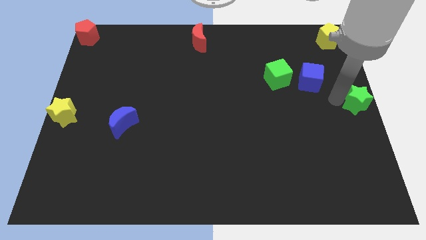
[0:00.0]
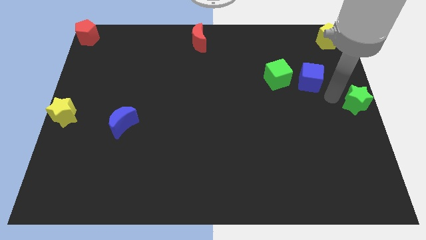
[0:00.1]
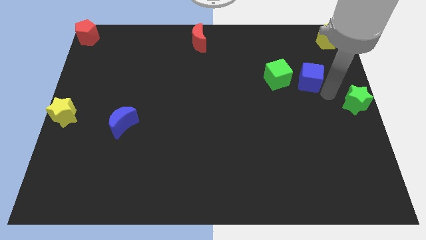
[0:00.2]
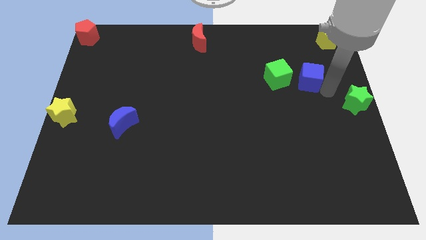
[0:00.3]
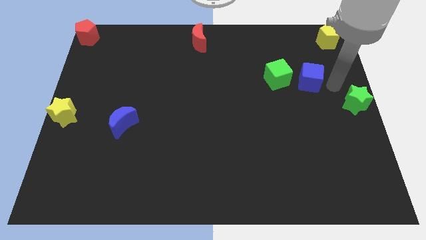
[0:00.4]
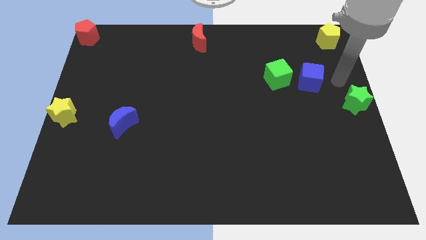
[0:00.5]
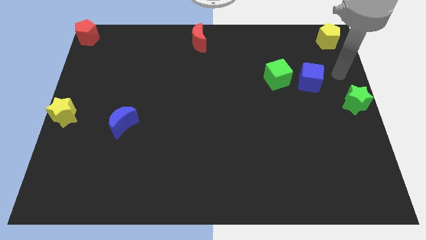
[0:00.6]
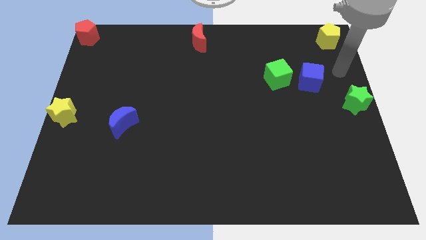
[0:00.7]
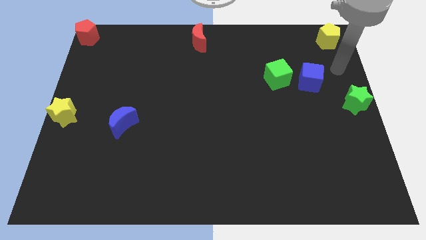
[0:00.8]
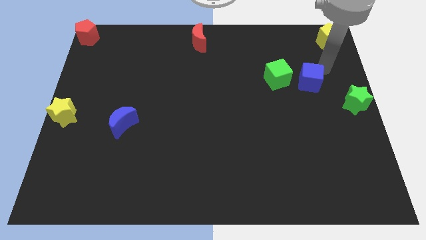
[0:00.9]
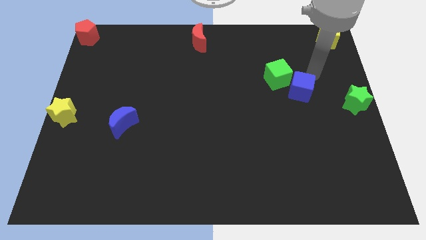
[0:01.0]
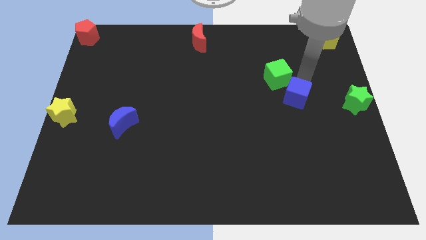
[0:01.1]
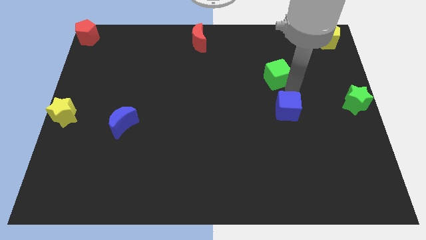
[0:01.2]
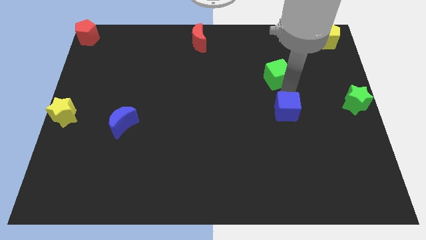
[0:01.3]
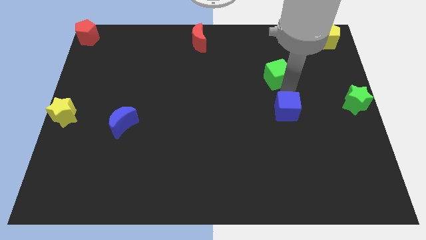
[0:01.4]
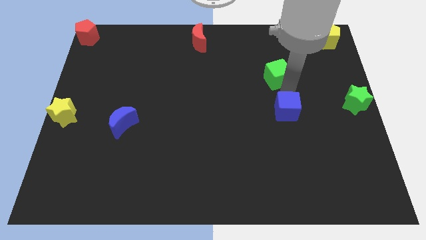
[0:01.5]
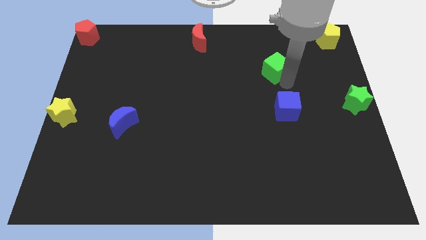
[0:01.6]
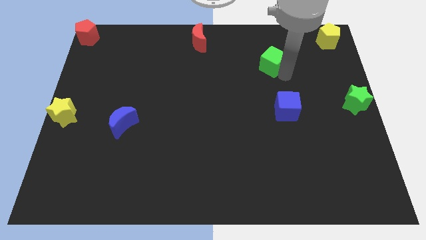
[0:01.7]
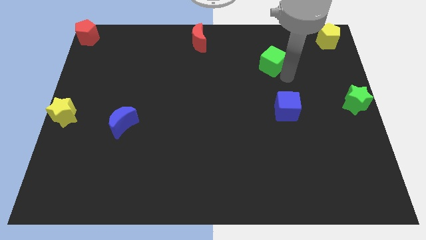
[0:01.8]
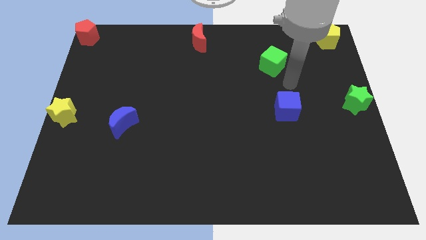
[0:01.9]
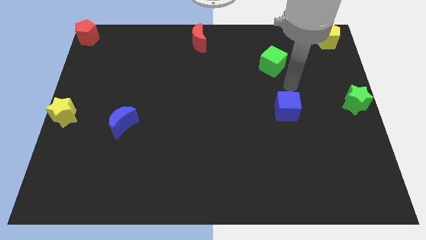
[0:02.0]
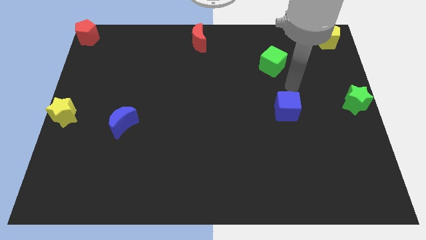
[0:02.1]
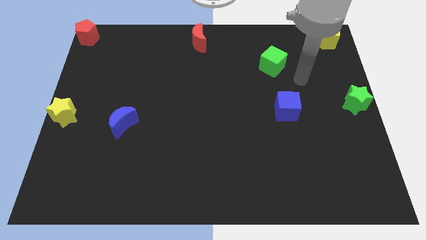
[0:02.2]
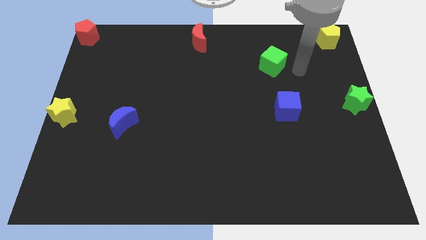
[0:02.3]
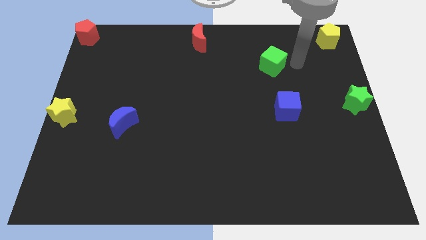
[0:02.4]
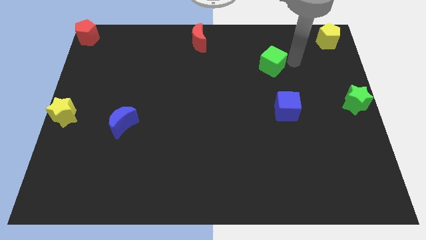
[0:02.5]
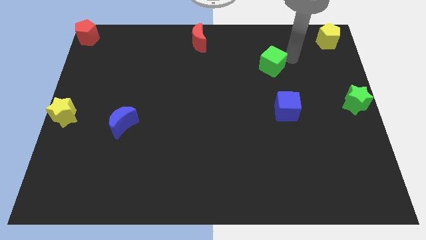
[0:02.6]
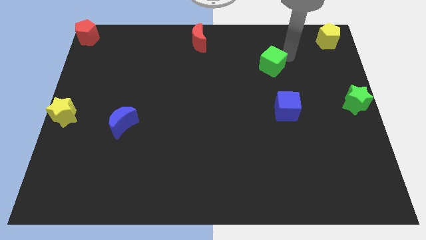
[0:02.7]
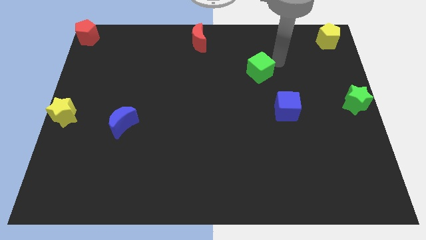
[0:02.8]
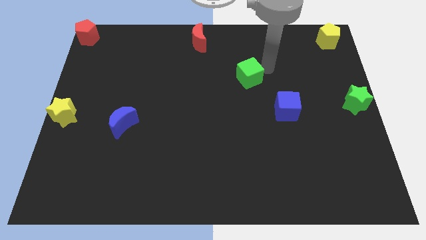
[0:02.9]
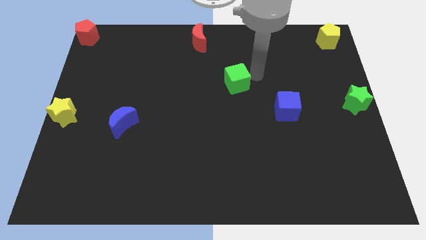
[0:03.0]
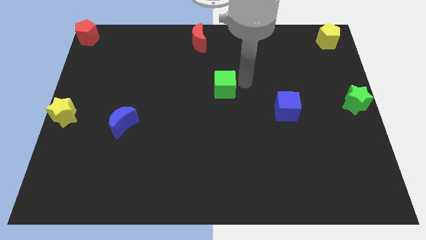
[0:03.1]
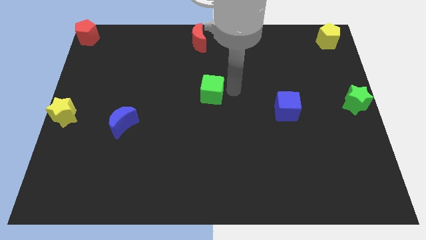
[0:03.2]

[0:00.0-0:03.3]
push both the cubes diagonally to each other

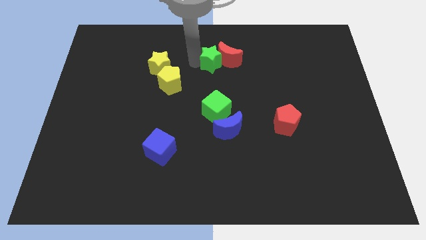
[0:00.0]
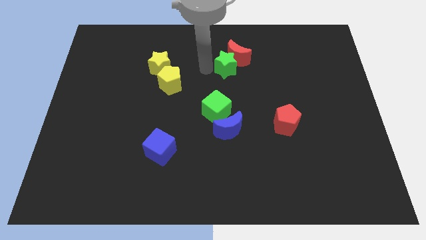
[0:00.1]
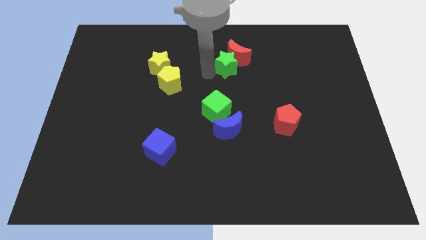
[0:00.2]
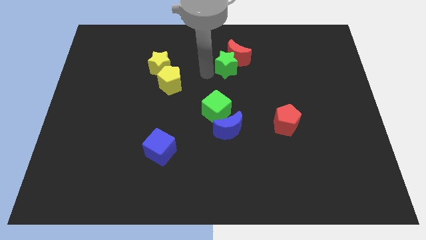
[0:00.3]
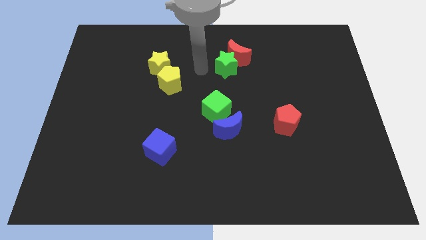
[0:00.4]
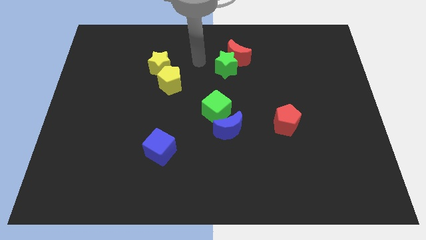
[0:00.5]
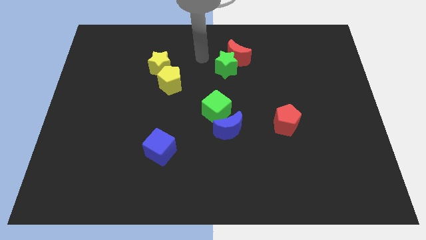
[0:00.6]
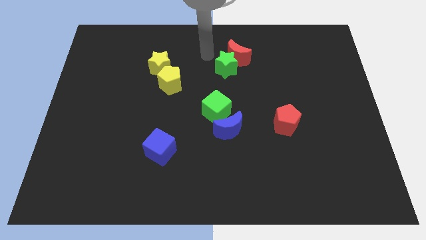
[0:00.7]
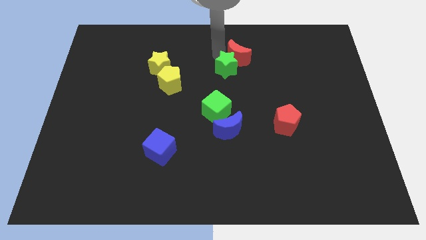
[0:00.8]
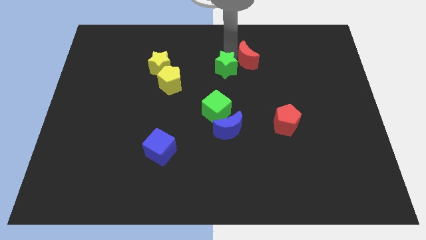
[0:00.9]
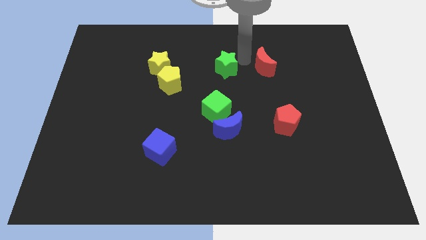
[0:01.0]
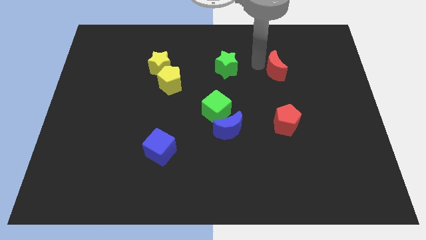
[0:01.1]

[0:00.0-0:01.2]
separate red moon from green star

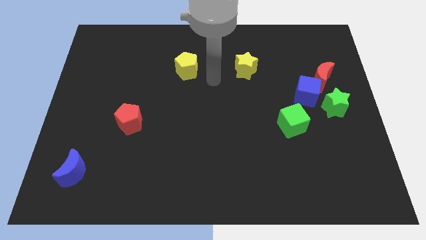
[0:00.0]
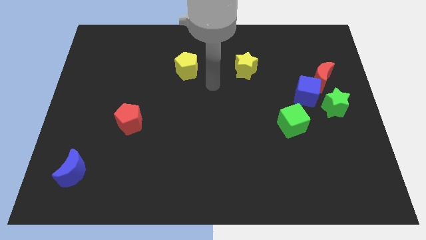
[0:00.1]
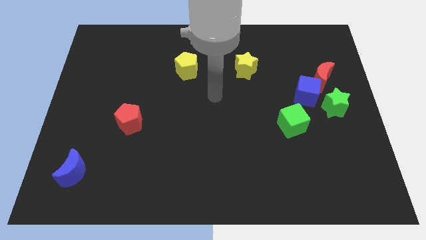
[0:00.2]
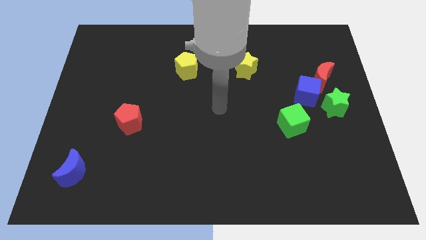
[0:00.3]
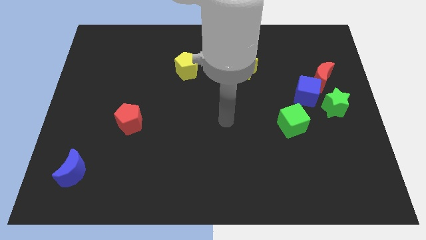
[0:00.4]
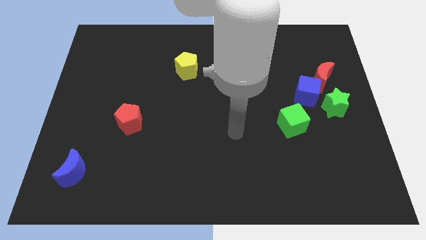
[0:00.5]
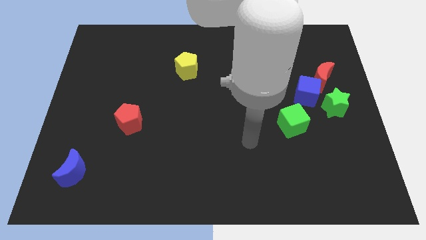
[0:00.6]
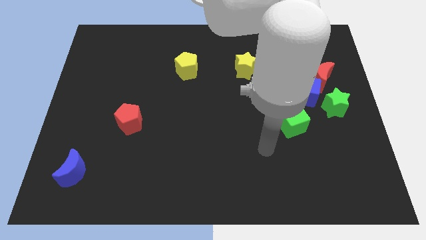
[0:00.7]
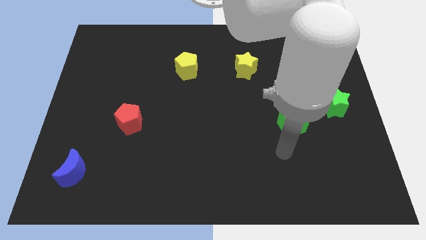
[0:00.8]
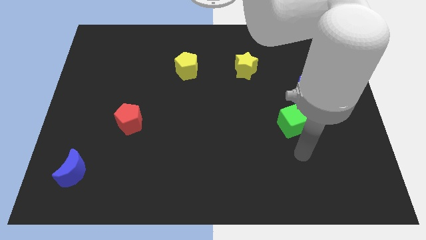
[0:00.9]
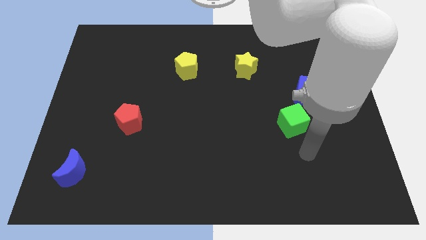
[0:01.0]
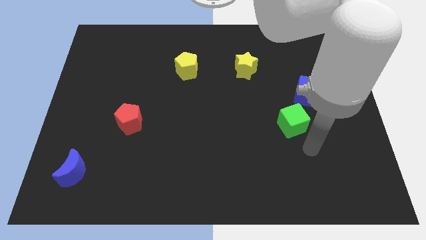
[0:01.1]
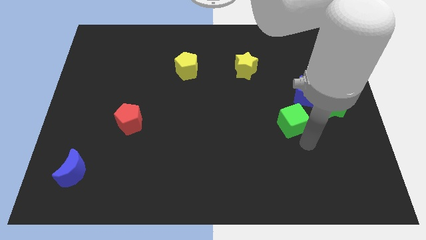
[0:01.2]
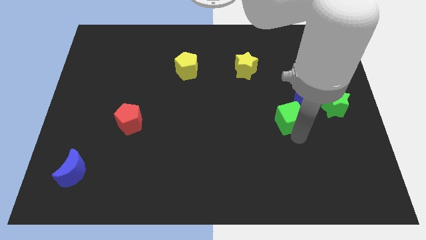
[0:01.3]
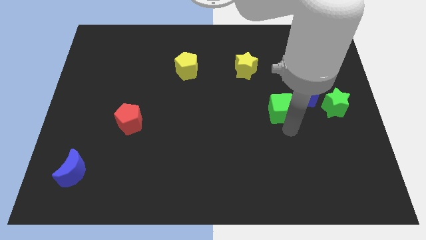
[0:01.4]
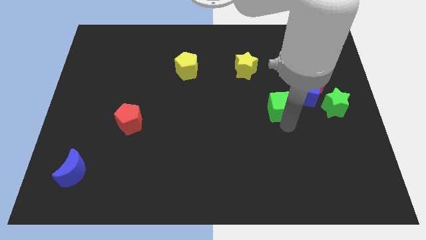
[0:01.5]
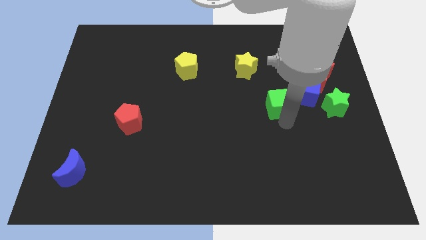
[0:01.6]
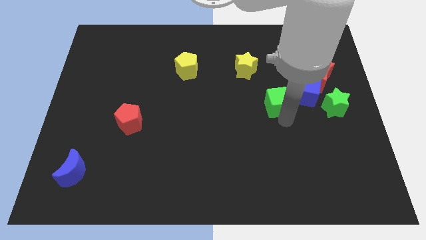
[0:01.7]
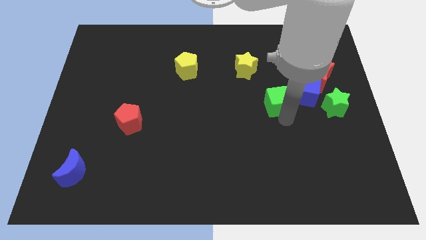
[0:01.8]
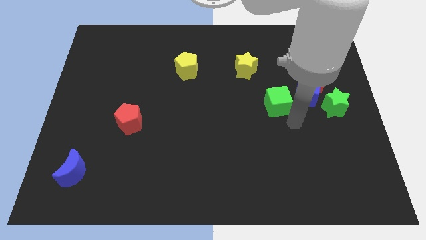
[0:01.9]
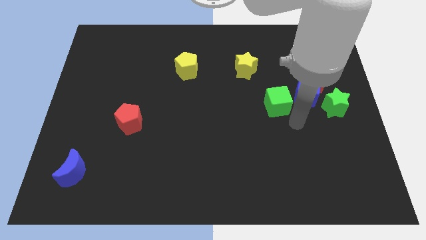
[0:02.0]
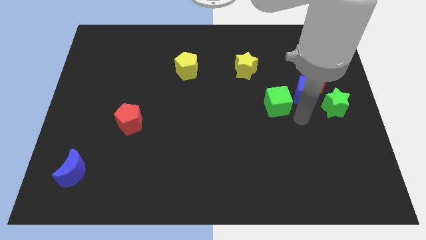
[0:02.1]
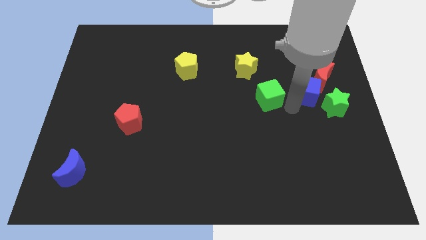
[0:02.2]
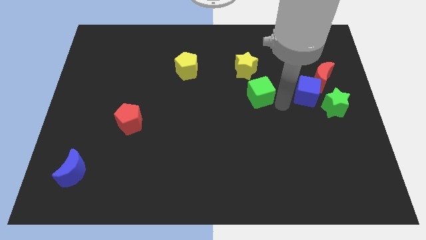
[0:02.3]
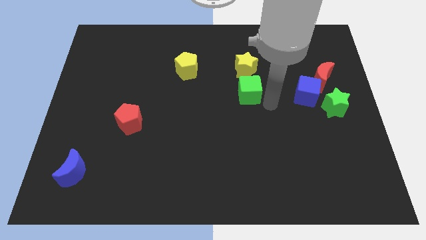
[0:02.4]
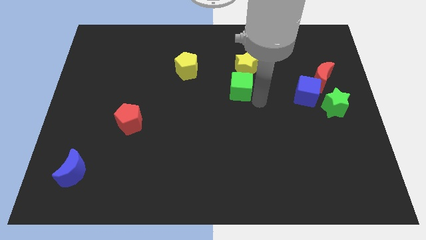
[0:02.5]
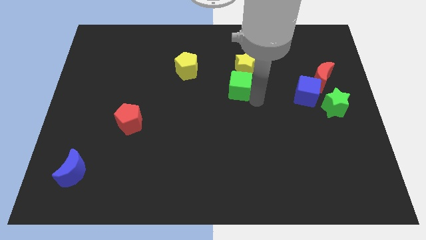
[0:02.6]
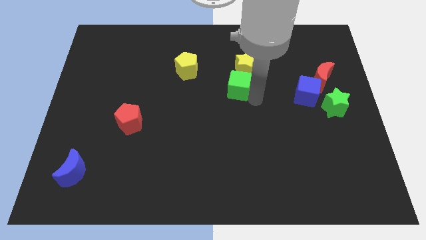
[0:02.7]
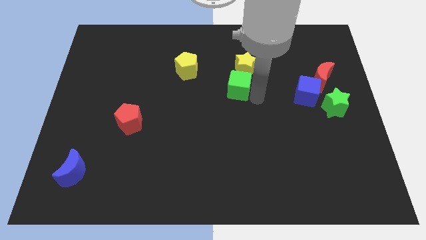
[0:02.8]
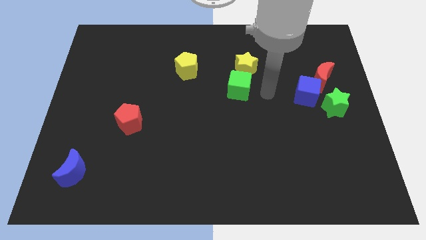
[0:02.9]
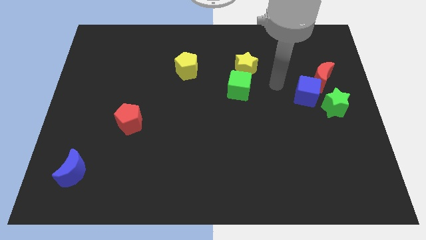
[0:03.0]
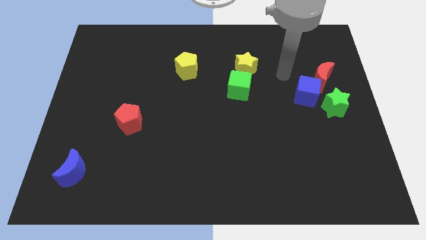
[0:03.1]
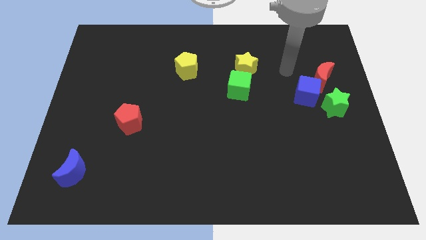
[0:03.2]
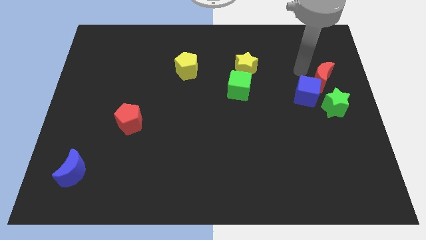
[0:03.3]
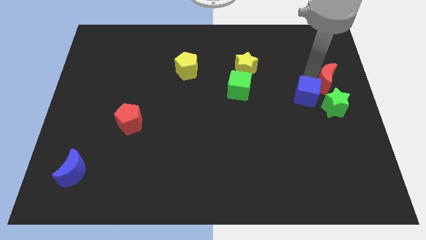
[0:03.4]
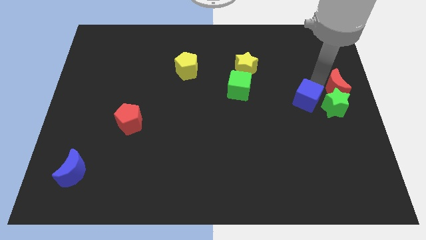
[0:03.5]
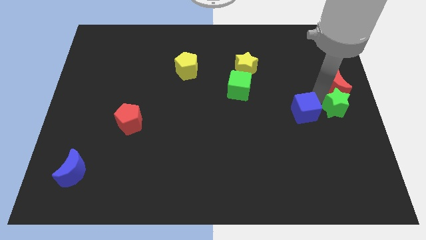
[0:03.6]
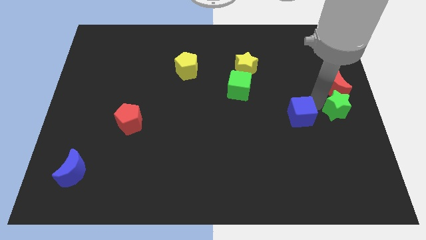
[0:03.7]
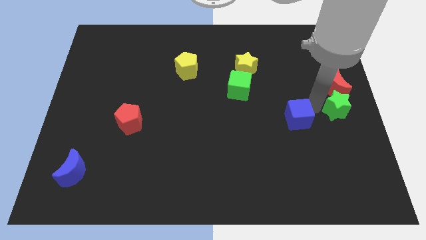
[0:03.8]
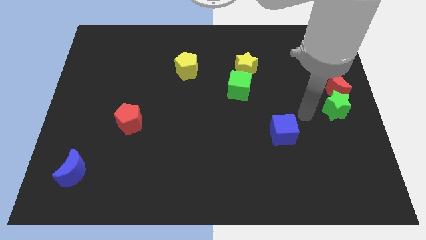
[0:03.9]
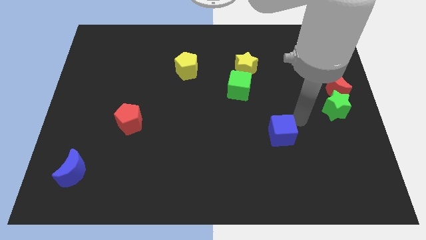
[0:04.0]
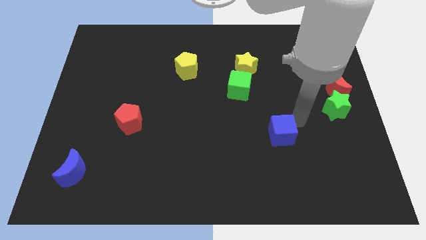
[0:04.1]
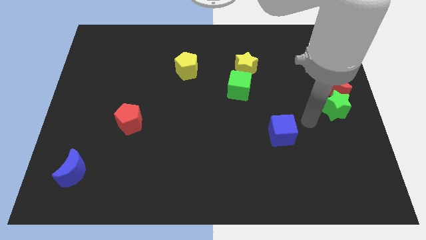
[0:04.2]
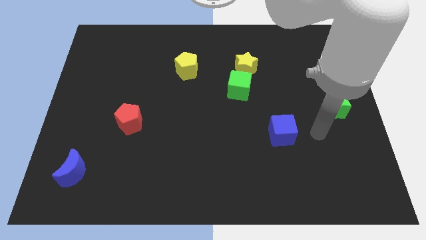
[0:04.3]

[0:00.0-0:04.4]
push the blue cube diagonally bottom right to the green cube
